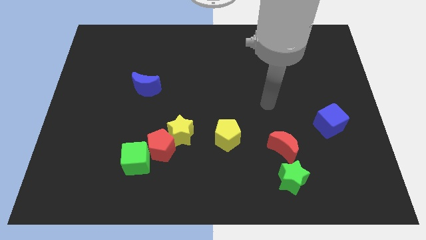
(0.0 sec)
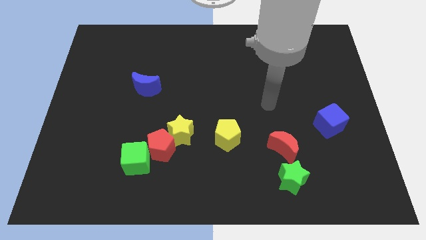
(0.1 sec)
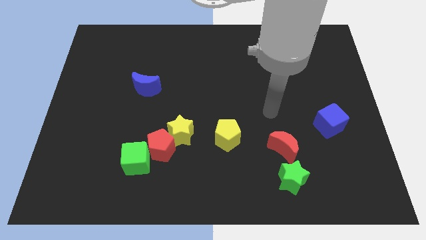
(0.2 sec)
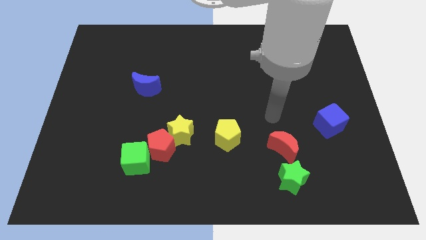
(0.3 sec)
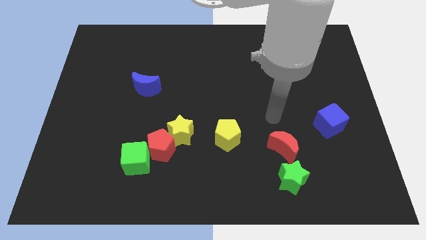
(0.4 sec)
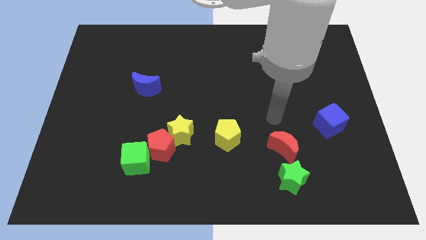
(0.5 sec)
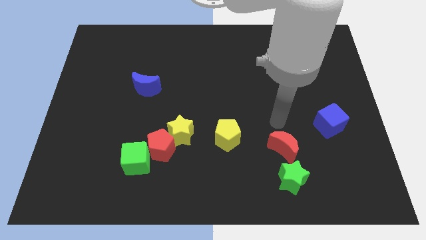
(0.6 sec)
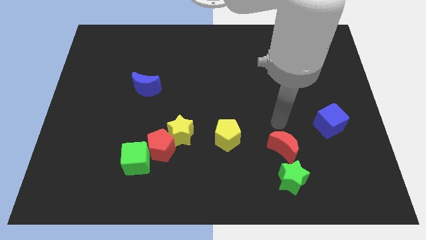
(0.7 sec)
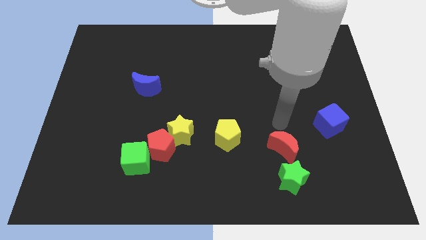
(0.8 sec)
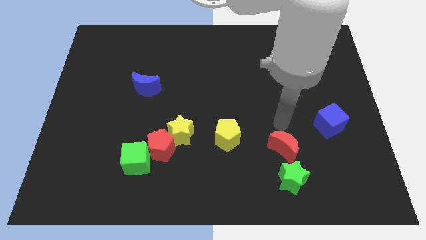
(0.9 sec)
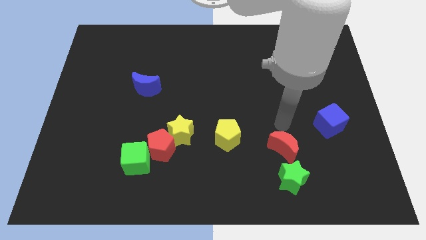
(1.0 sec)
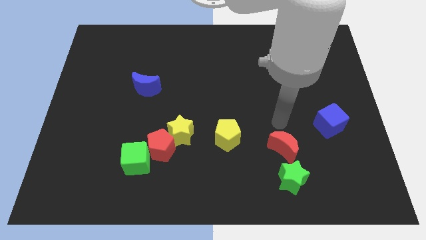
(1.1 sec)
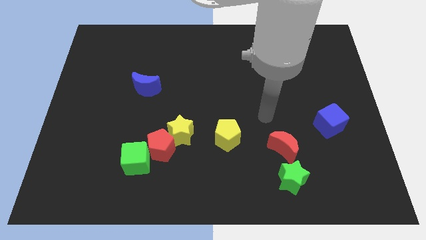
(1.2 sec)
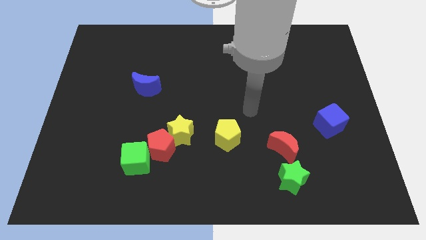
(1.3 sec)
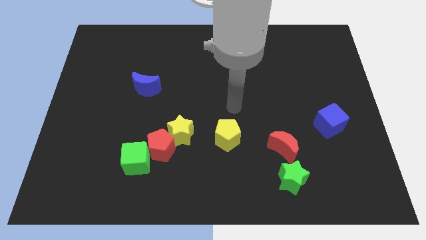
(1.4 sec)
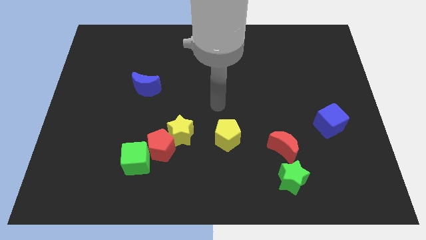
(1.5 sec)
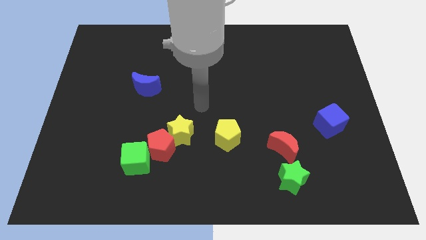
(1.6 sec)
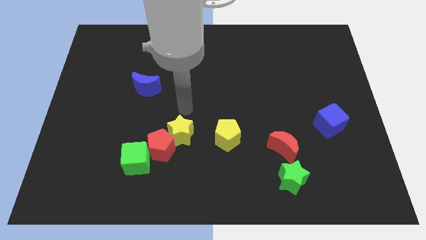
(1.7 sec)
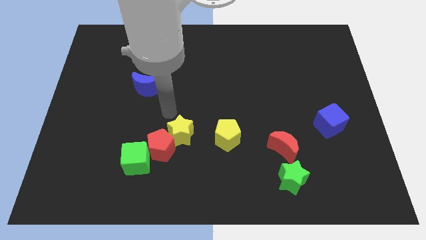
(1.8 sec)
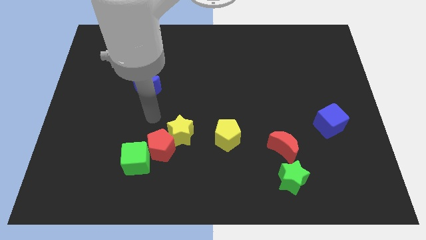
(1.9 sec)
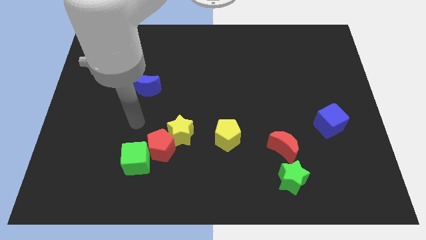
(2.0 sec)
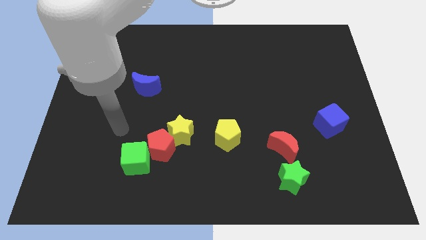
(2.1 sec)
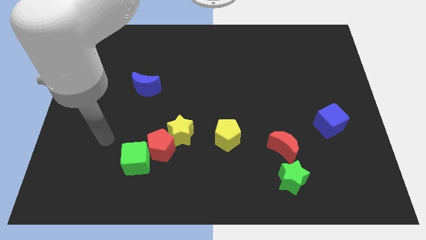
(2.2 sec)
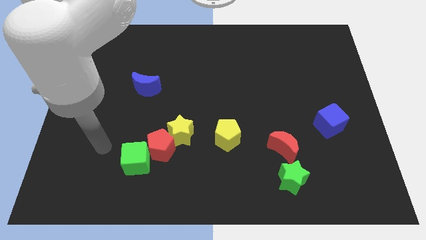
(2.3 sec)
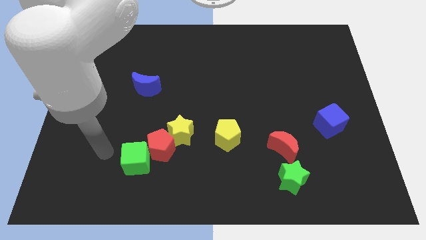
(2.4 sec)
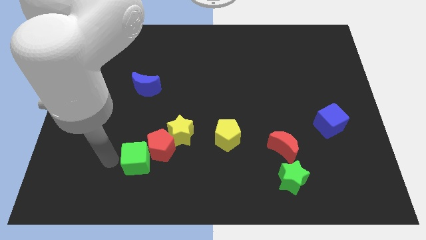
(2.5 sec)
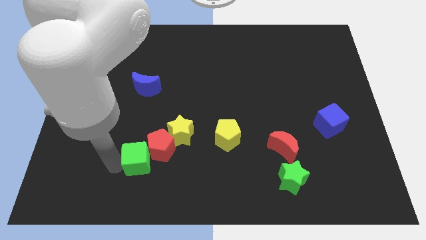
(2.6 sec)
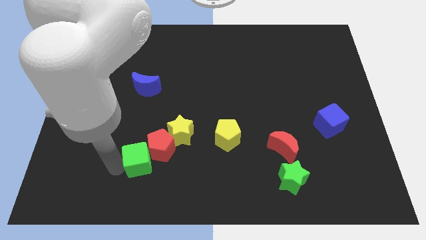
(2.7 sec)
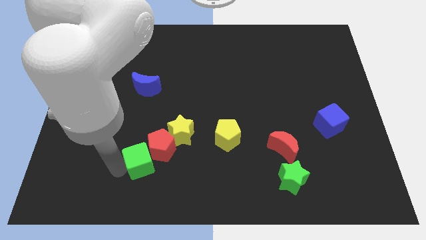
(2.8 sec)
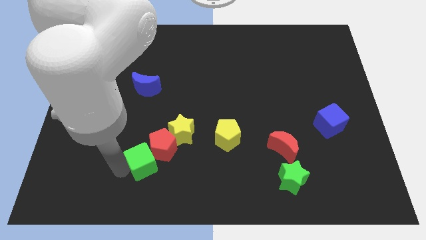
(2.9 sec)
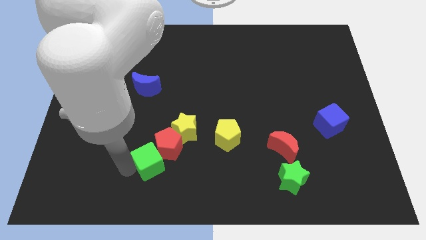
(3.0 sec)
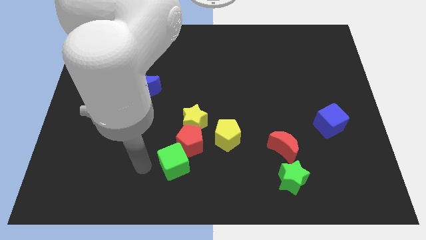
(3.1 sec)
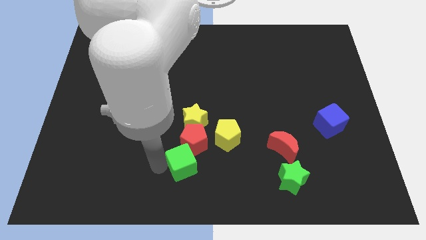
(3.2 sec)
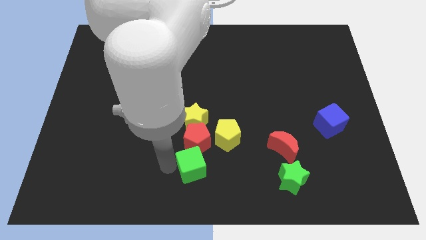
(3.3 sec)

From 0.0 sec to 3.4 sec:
push the green cube to the bottom of the red pentagon

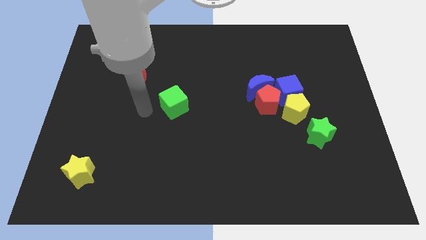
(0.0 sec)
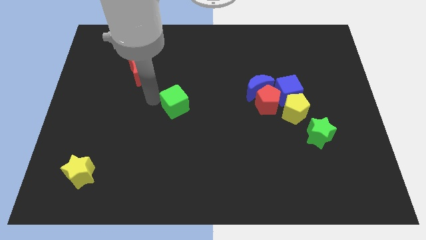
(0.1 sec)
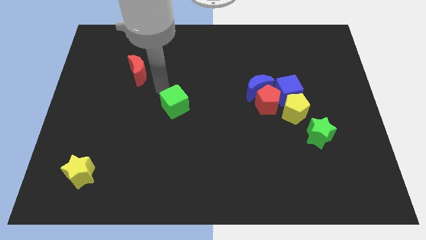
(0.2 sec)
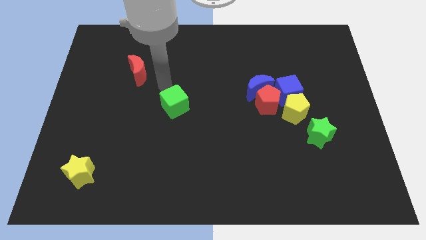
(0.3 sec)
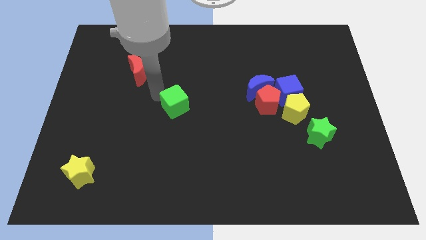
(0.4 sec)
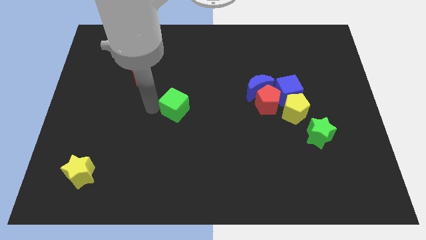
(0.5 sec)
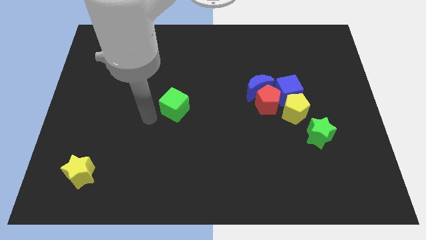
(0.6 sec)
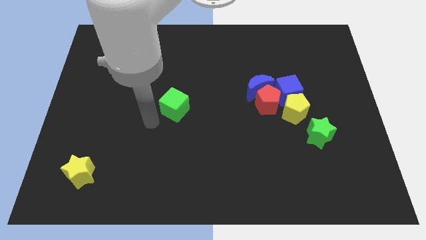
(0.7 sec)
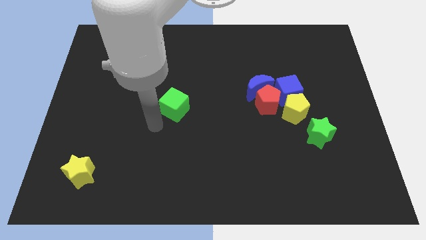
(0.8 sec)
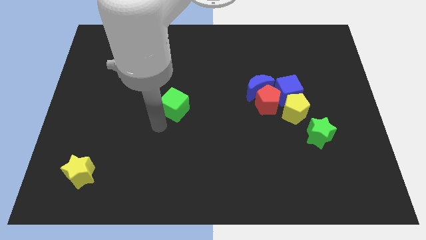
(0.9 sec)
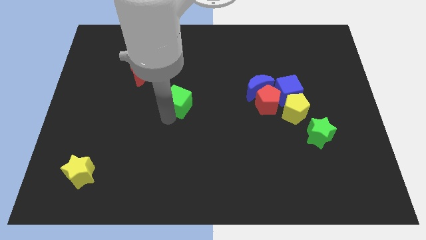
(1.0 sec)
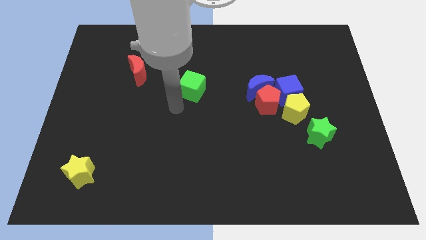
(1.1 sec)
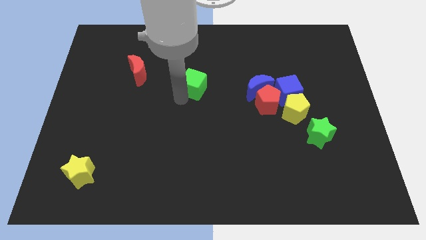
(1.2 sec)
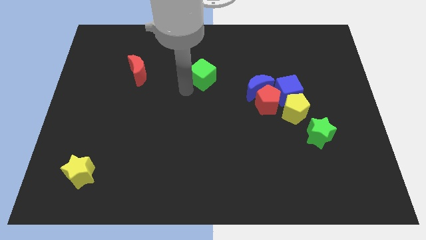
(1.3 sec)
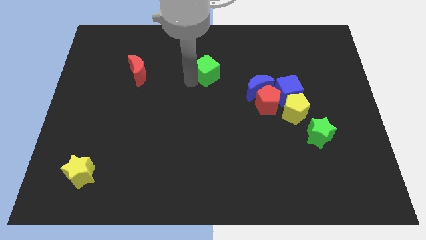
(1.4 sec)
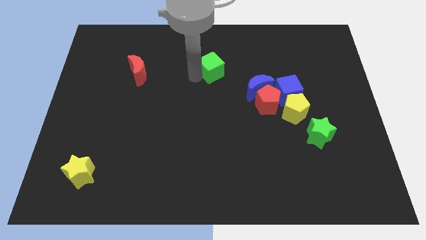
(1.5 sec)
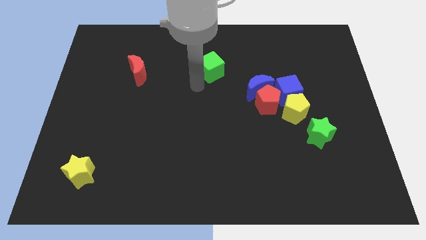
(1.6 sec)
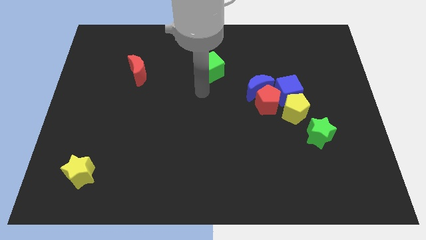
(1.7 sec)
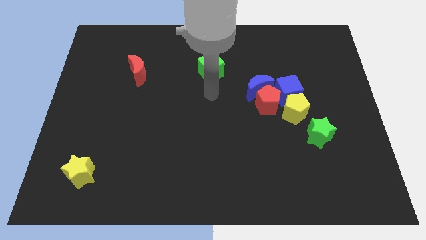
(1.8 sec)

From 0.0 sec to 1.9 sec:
place the green cube horizontally to the right side of the red crescent

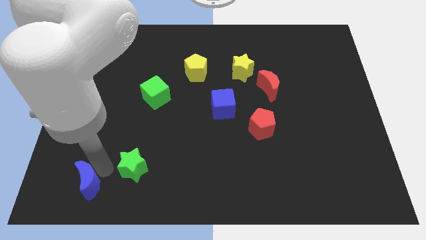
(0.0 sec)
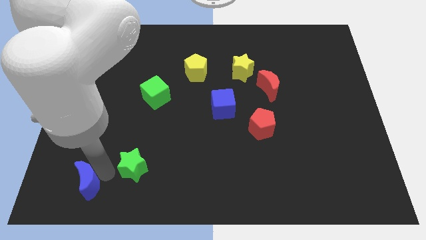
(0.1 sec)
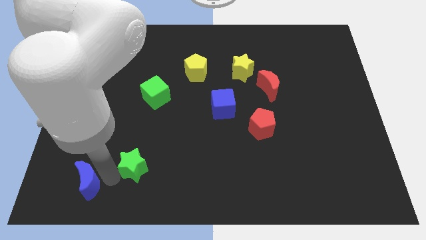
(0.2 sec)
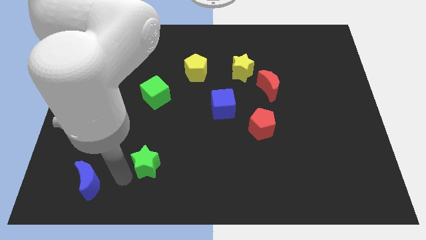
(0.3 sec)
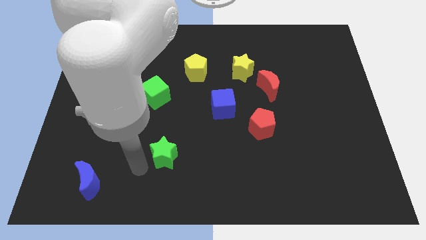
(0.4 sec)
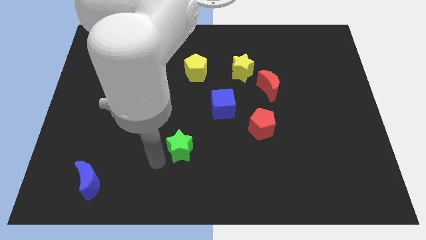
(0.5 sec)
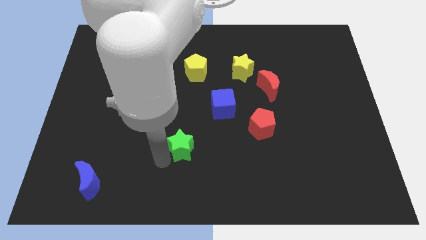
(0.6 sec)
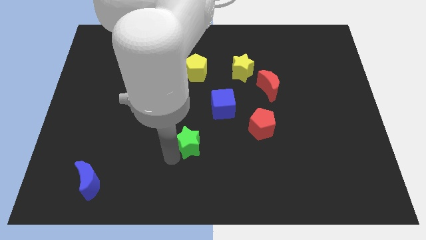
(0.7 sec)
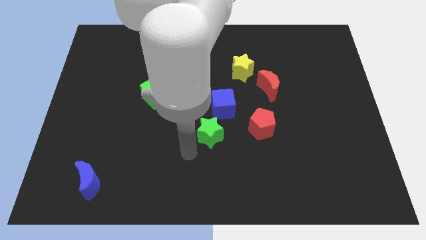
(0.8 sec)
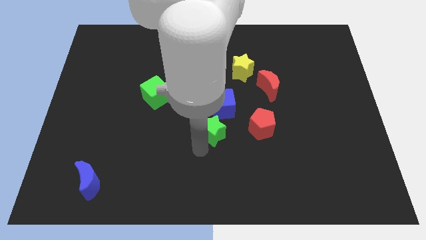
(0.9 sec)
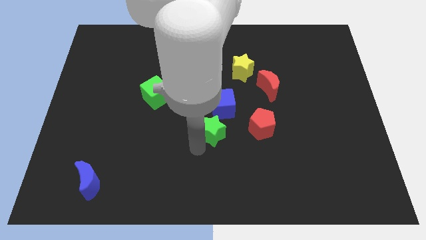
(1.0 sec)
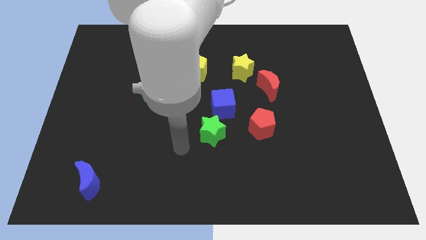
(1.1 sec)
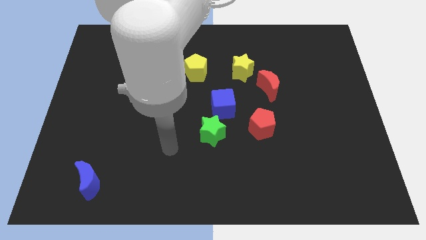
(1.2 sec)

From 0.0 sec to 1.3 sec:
slide the green star towards the blue cube

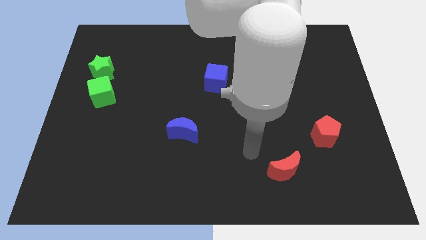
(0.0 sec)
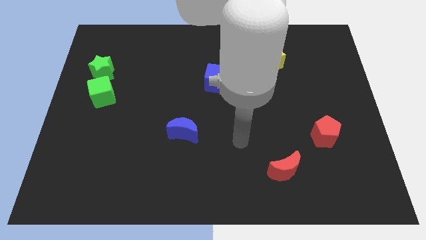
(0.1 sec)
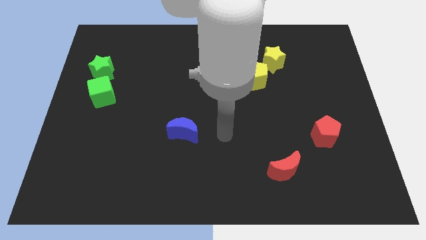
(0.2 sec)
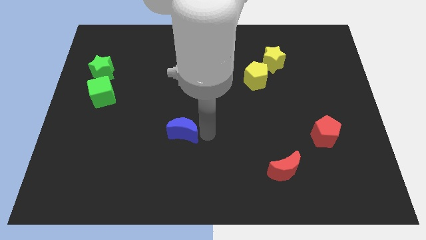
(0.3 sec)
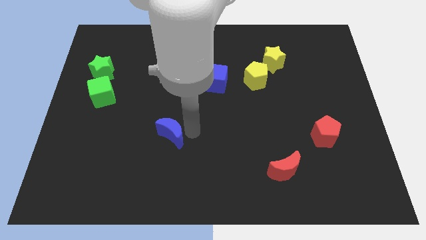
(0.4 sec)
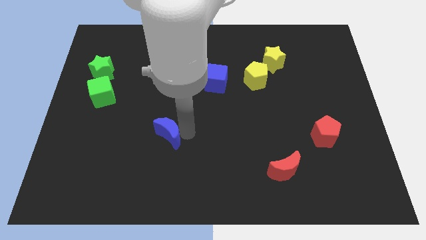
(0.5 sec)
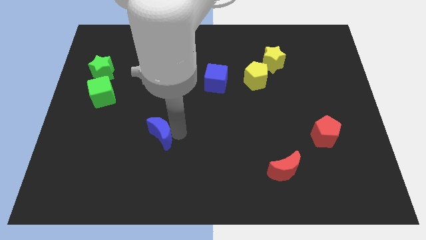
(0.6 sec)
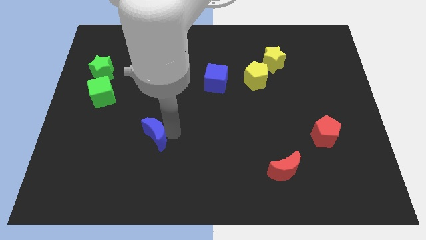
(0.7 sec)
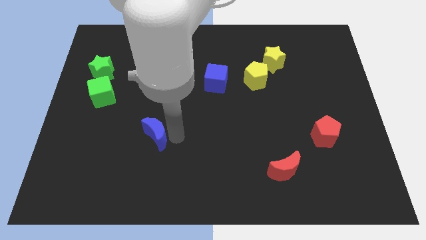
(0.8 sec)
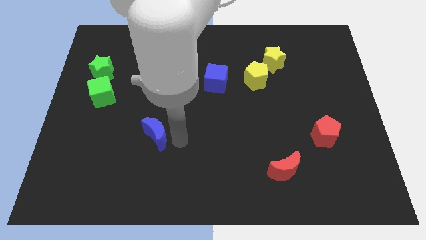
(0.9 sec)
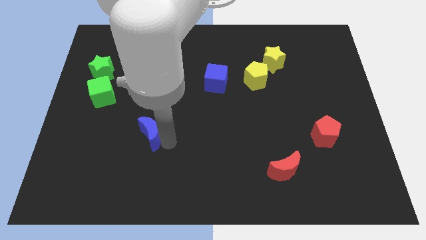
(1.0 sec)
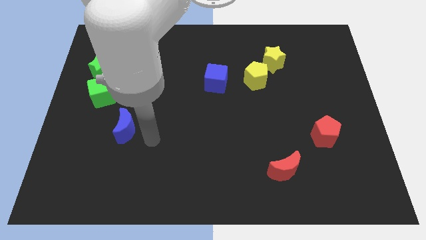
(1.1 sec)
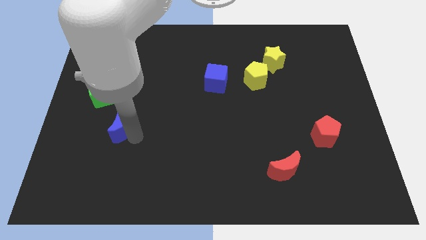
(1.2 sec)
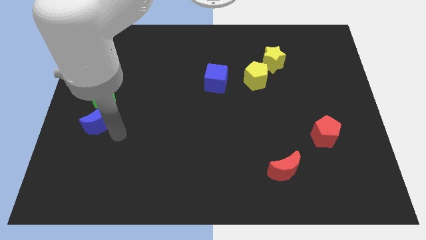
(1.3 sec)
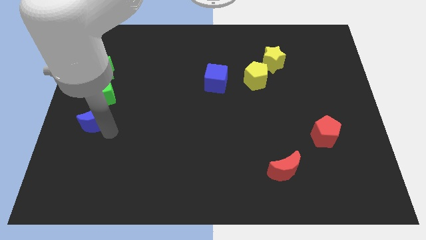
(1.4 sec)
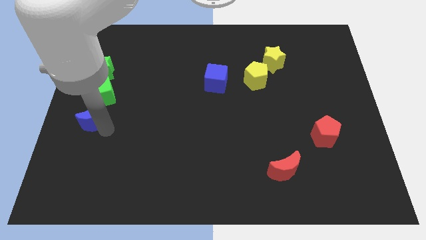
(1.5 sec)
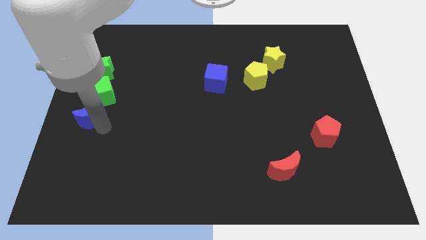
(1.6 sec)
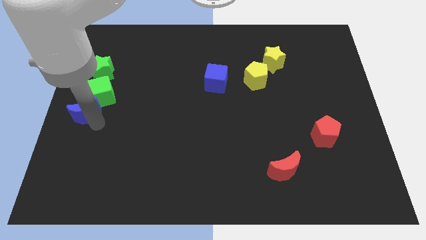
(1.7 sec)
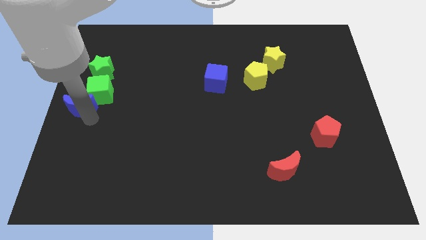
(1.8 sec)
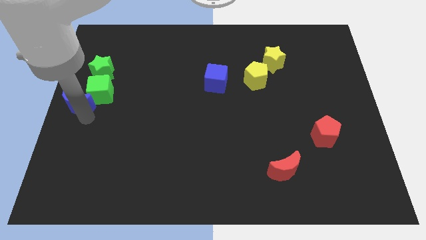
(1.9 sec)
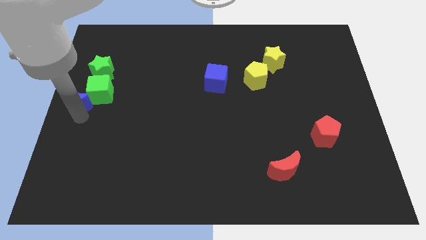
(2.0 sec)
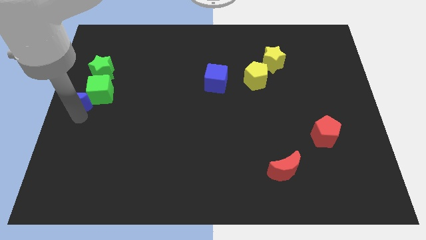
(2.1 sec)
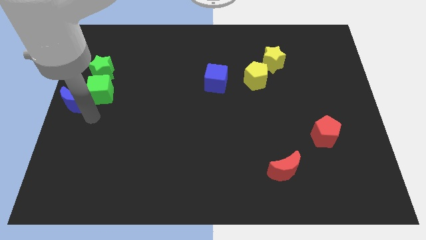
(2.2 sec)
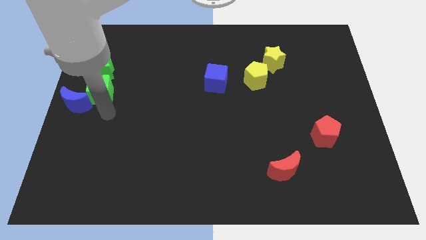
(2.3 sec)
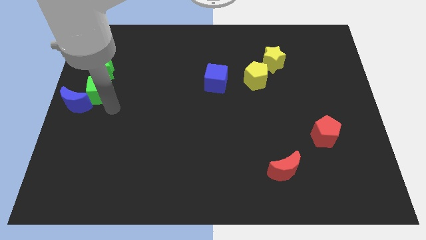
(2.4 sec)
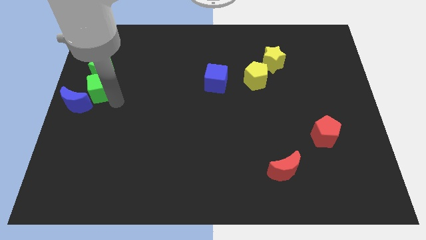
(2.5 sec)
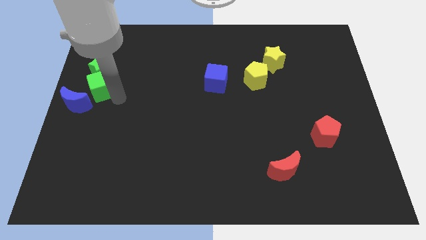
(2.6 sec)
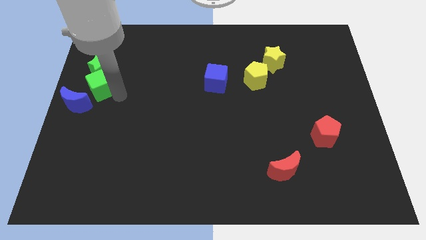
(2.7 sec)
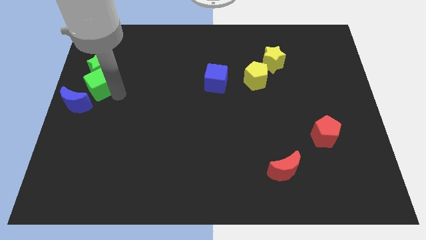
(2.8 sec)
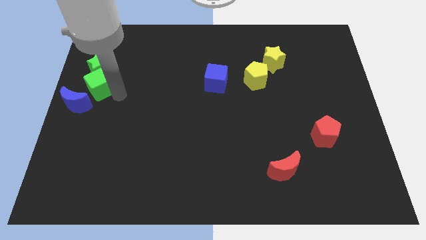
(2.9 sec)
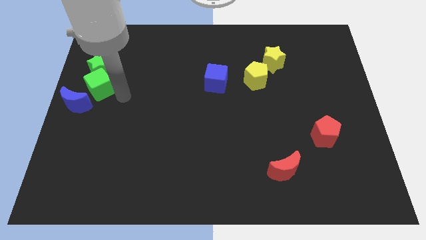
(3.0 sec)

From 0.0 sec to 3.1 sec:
place the blue crescent to the left center of the board
